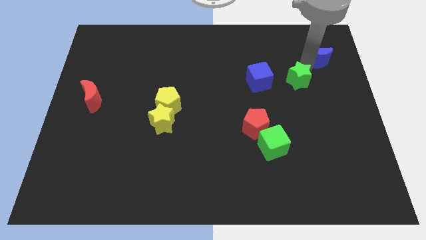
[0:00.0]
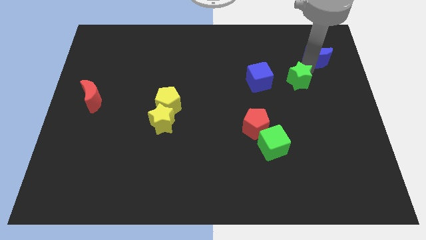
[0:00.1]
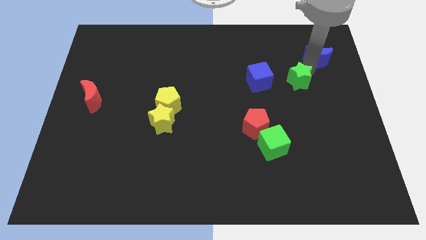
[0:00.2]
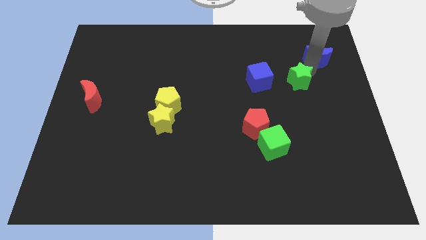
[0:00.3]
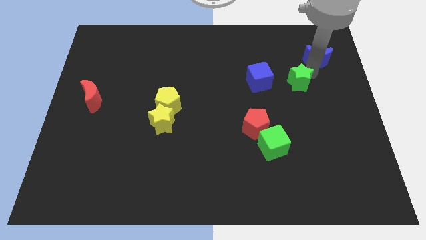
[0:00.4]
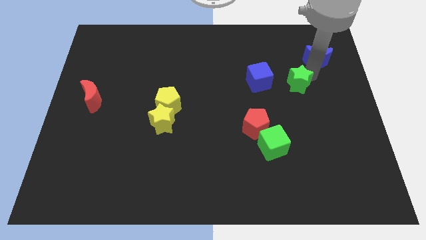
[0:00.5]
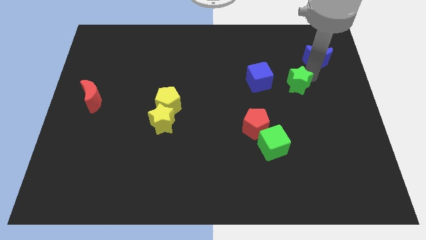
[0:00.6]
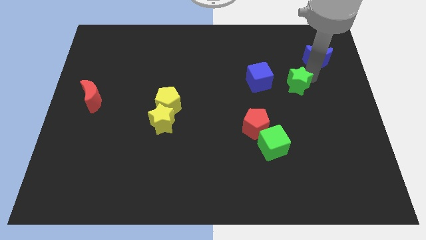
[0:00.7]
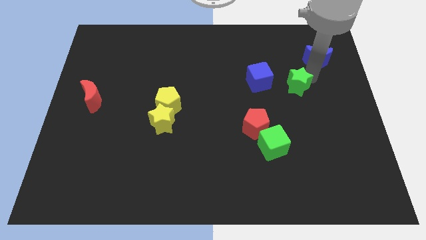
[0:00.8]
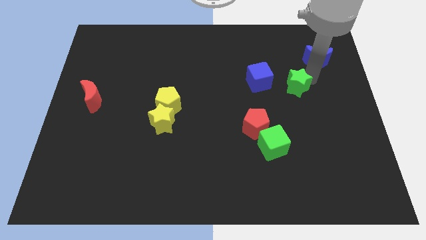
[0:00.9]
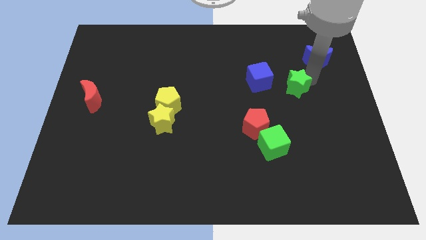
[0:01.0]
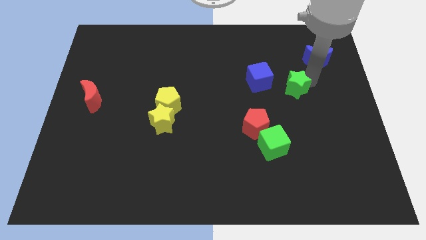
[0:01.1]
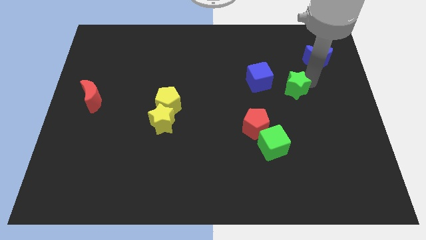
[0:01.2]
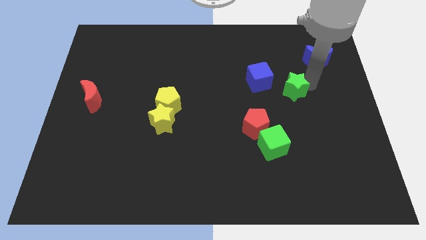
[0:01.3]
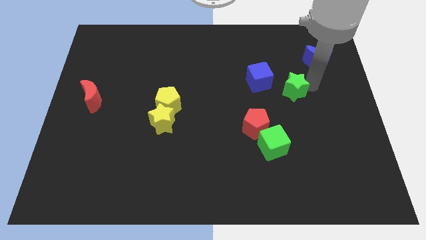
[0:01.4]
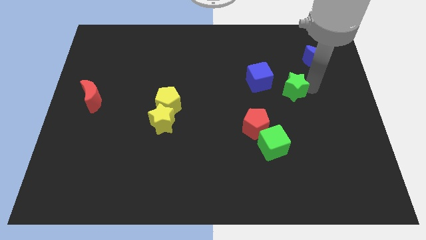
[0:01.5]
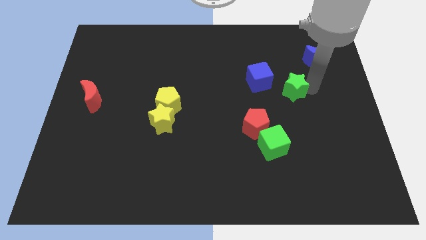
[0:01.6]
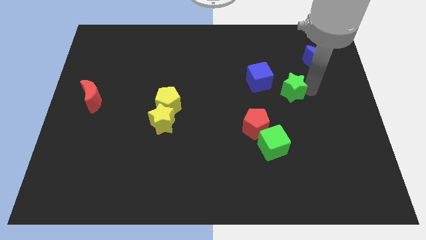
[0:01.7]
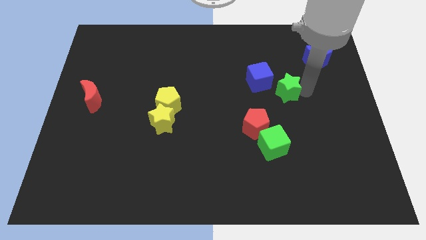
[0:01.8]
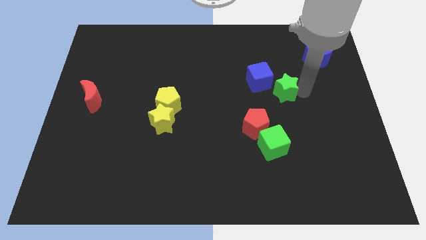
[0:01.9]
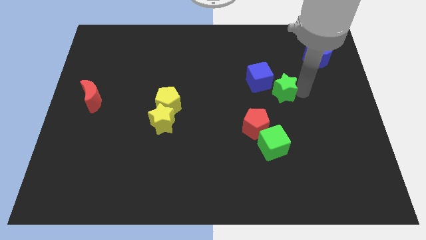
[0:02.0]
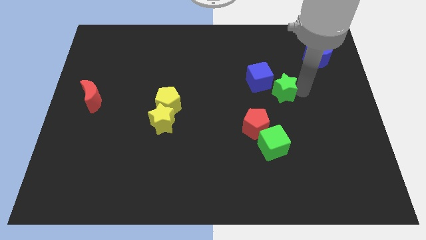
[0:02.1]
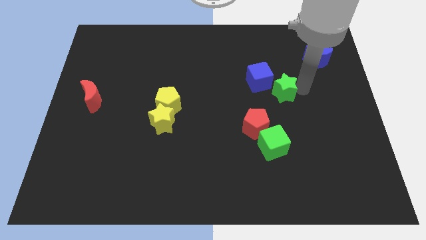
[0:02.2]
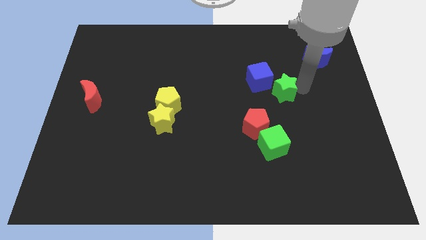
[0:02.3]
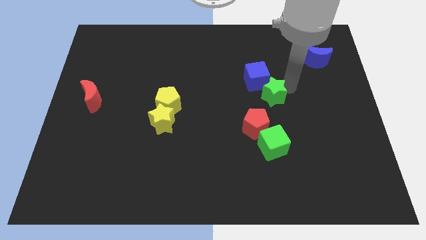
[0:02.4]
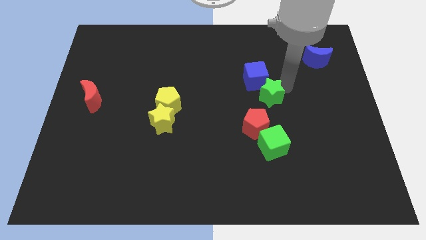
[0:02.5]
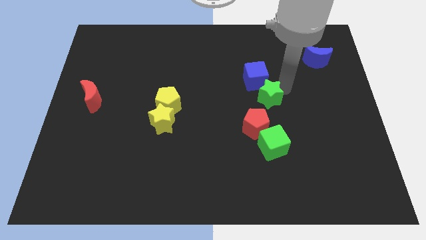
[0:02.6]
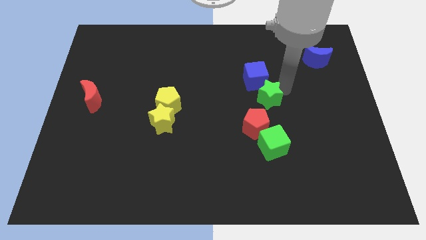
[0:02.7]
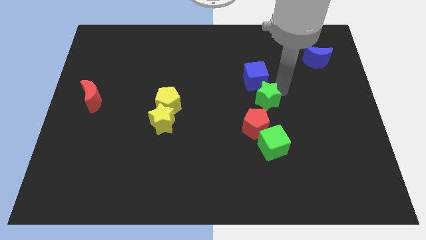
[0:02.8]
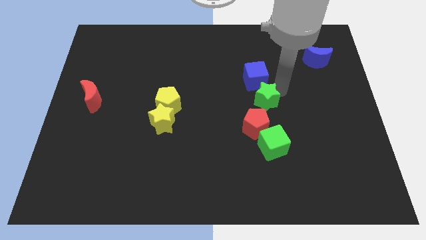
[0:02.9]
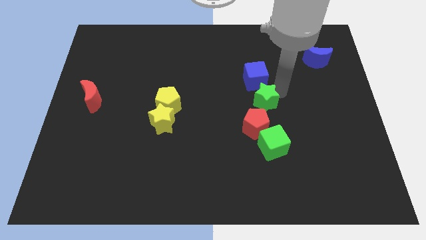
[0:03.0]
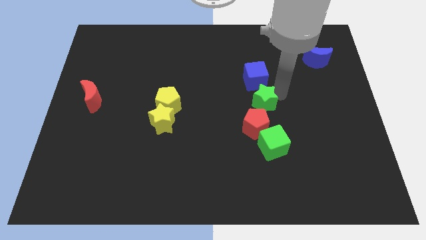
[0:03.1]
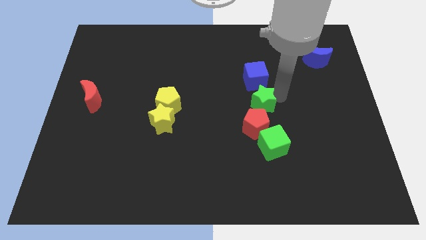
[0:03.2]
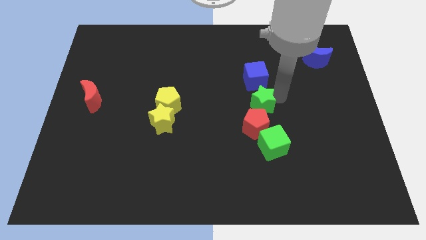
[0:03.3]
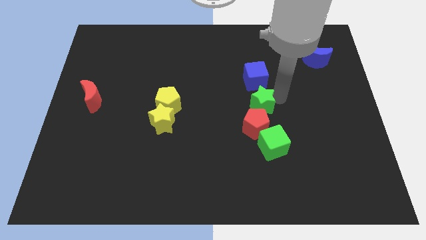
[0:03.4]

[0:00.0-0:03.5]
move the green star to the bottom of the blue cube

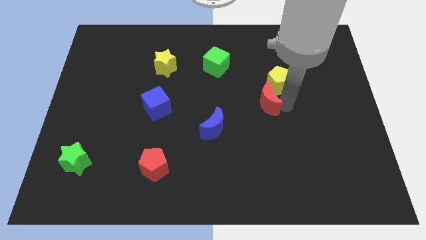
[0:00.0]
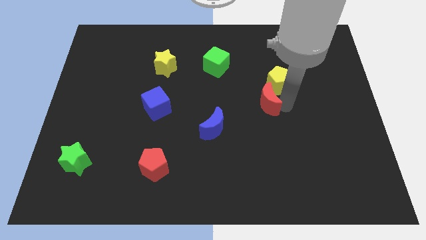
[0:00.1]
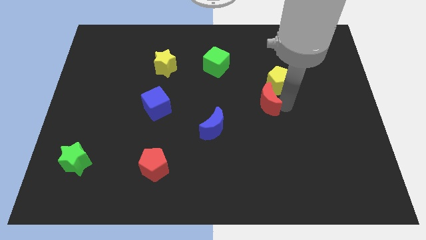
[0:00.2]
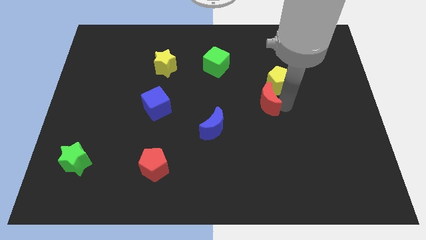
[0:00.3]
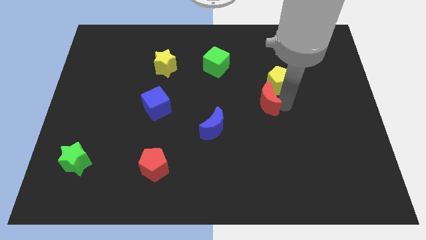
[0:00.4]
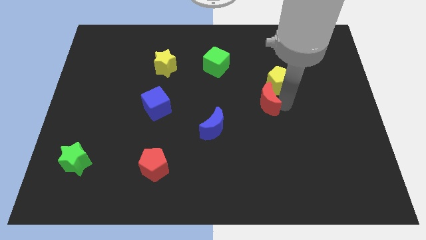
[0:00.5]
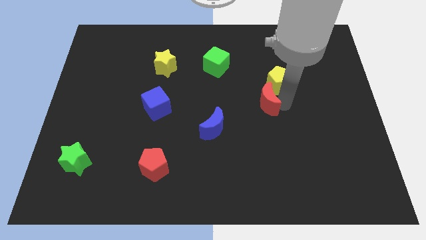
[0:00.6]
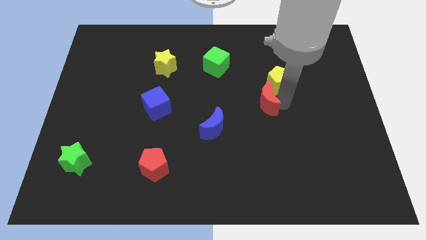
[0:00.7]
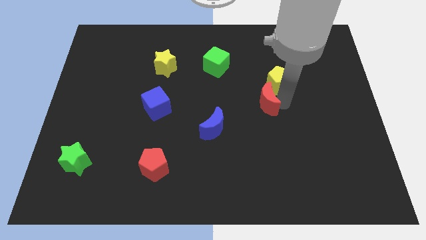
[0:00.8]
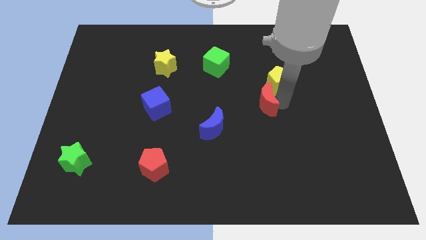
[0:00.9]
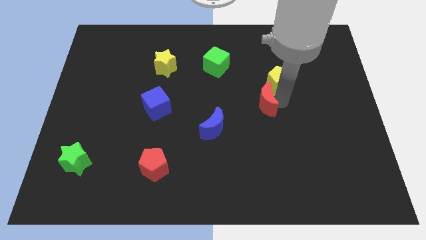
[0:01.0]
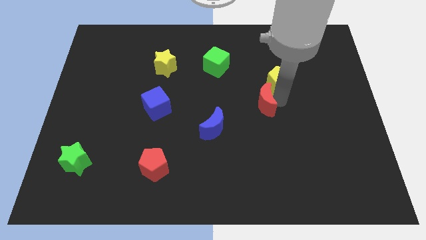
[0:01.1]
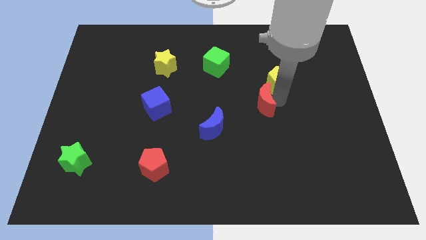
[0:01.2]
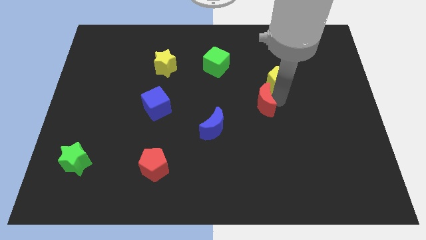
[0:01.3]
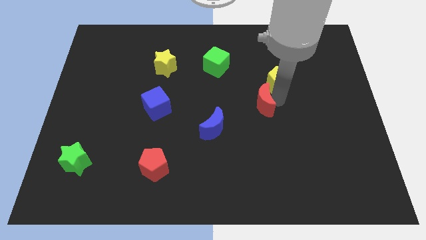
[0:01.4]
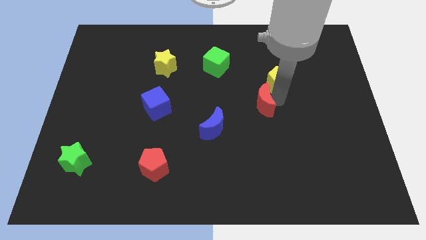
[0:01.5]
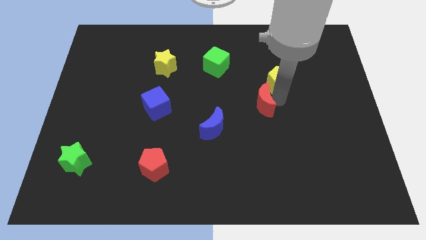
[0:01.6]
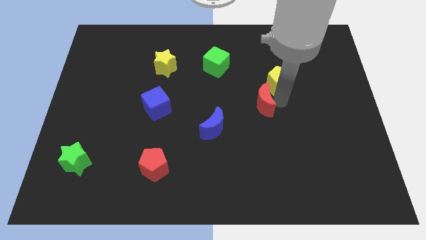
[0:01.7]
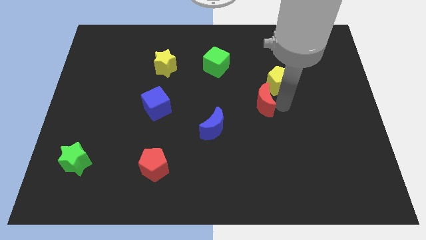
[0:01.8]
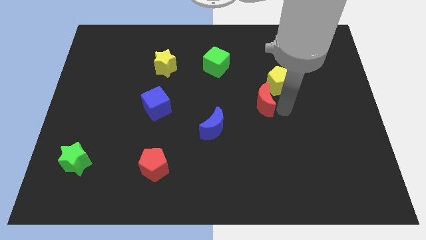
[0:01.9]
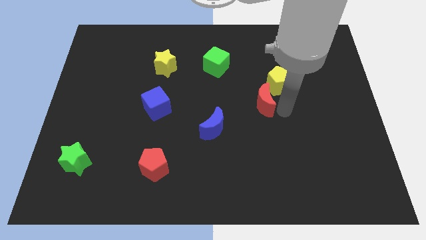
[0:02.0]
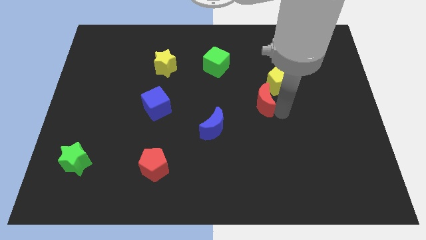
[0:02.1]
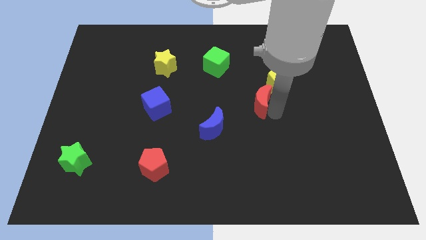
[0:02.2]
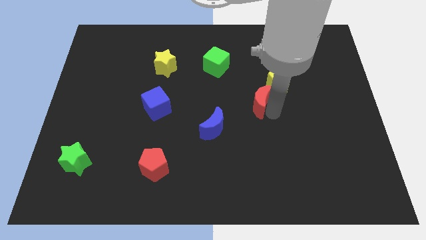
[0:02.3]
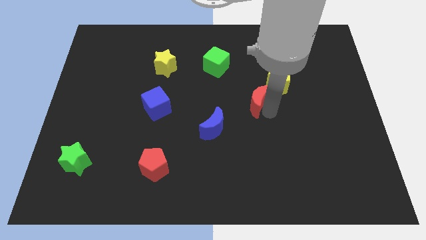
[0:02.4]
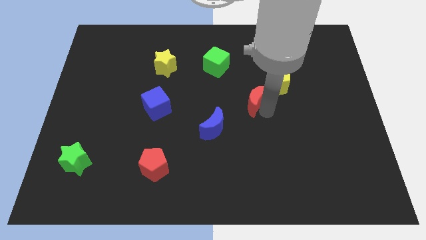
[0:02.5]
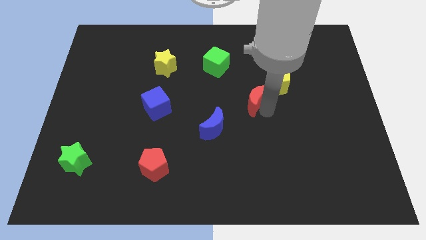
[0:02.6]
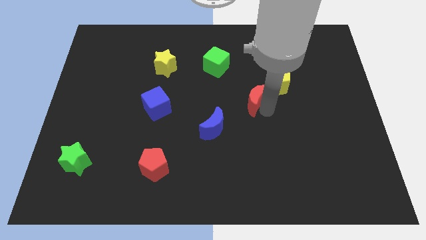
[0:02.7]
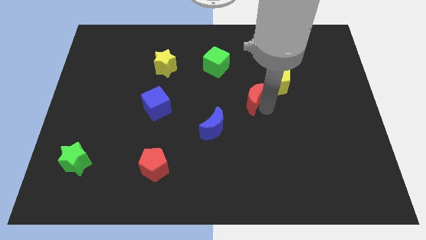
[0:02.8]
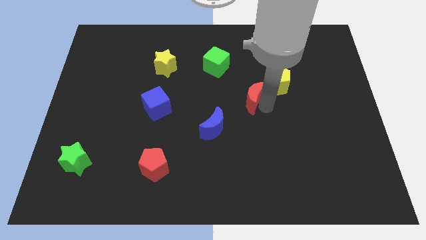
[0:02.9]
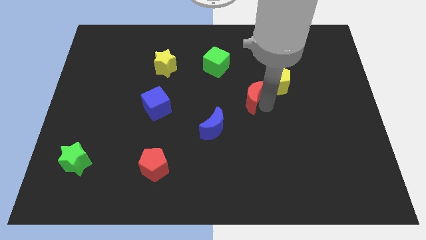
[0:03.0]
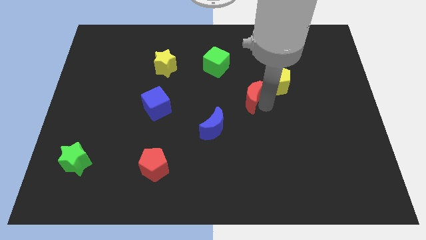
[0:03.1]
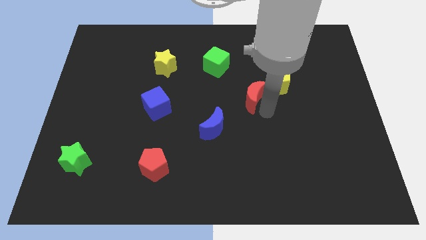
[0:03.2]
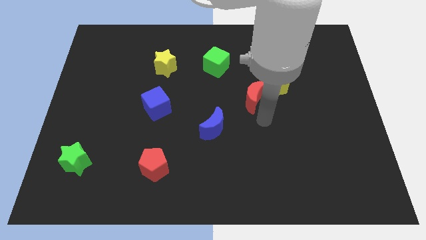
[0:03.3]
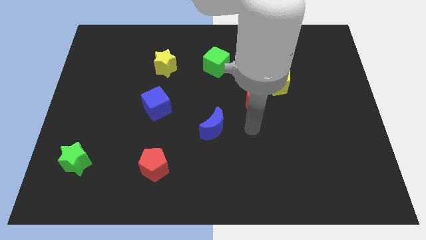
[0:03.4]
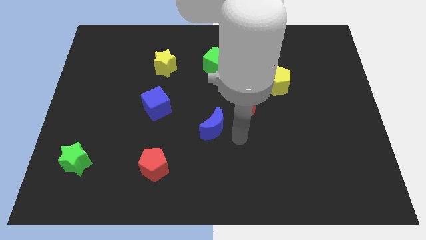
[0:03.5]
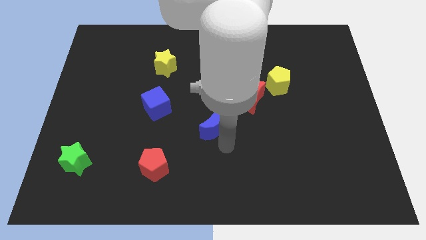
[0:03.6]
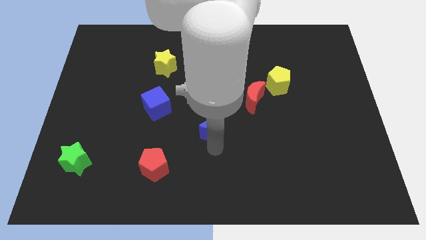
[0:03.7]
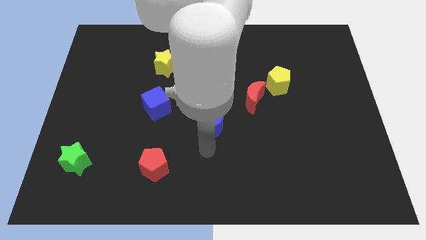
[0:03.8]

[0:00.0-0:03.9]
place the red moon in between the blue moon and yellow pentagon

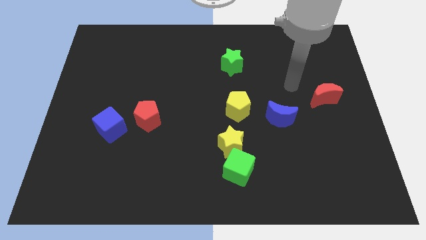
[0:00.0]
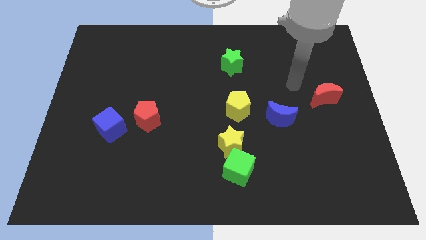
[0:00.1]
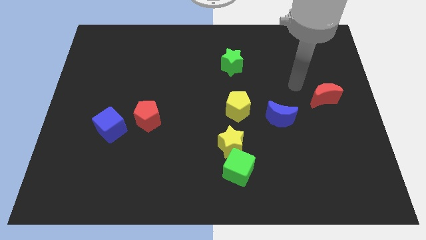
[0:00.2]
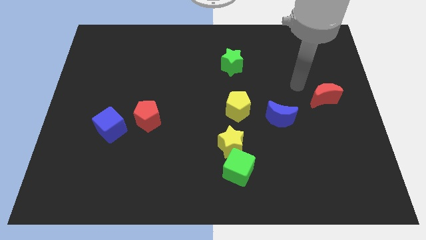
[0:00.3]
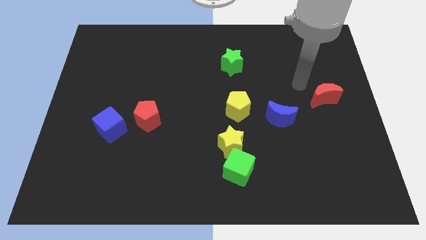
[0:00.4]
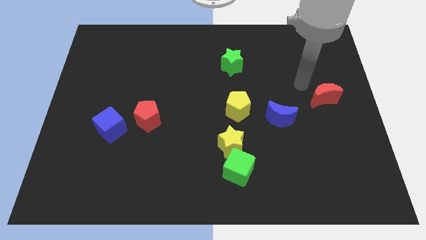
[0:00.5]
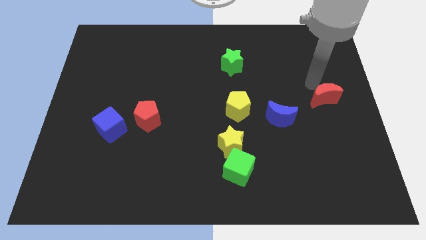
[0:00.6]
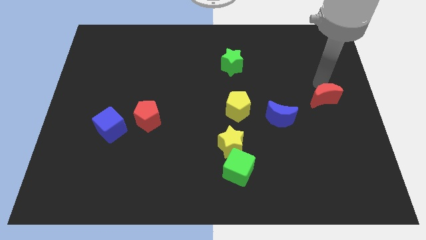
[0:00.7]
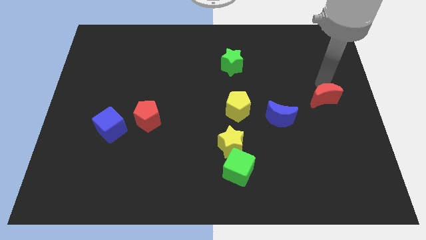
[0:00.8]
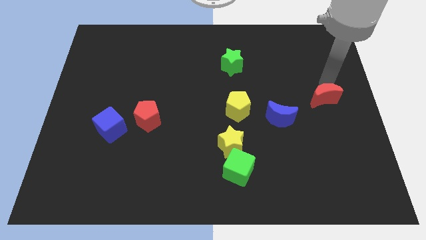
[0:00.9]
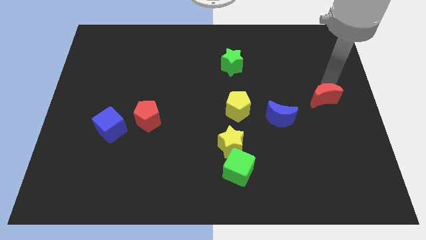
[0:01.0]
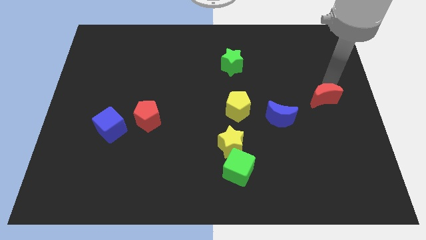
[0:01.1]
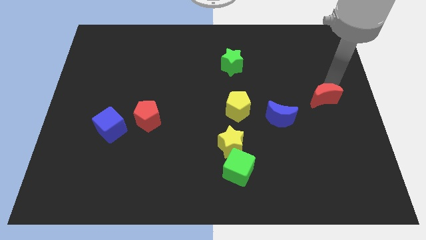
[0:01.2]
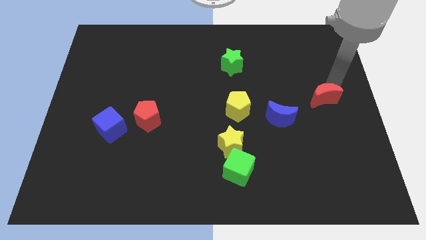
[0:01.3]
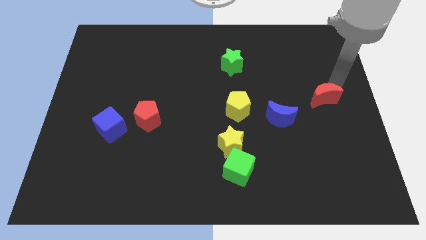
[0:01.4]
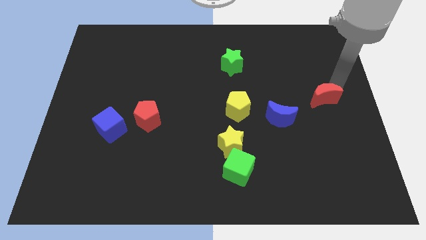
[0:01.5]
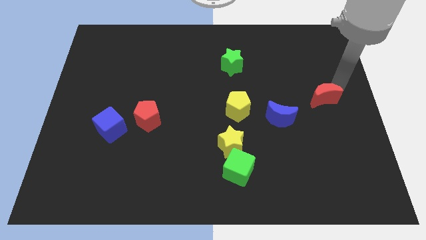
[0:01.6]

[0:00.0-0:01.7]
point your arm at the top right side of the red moon
